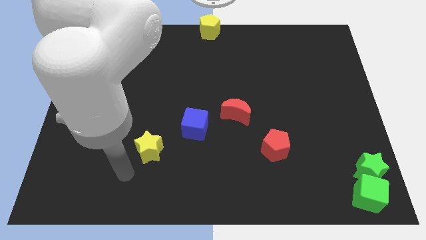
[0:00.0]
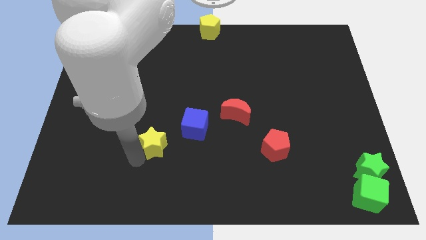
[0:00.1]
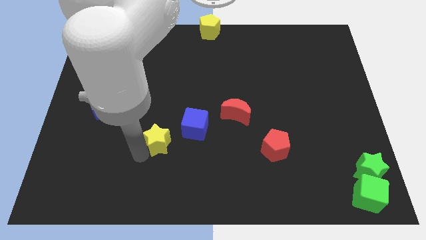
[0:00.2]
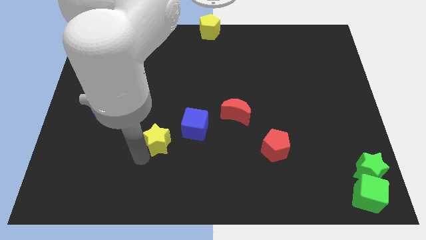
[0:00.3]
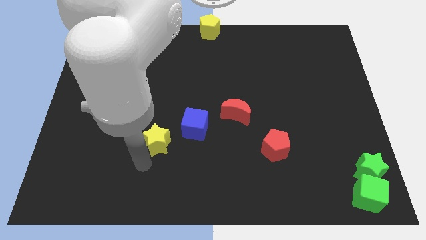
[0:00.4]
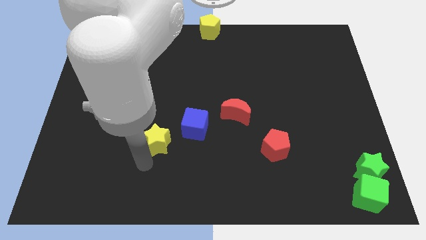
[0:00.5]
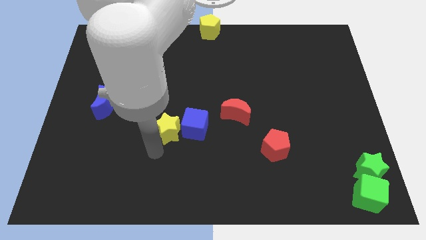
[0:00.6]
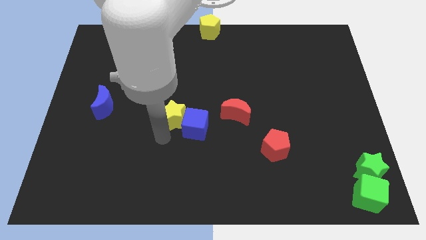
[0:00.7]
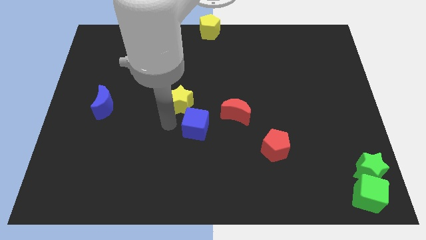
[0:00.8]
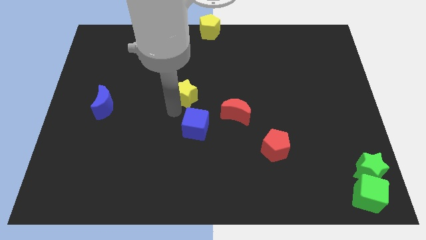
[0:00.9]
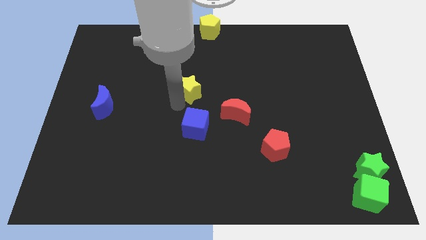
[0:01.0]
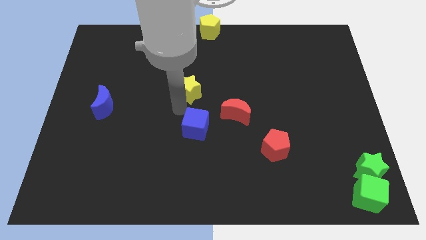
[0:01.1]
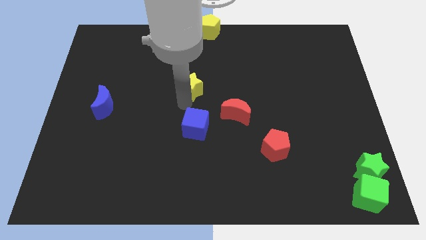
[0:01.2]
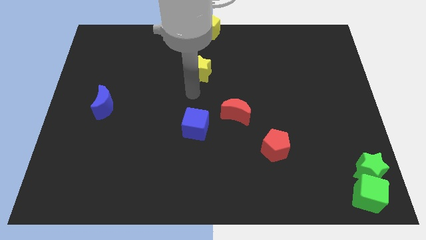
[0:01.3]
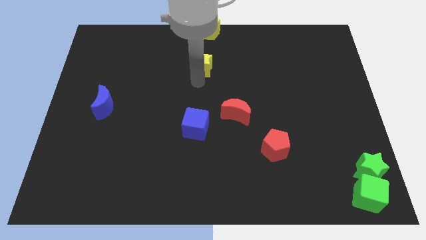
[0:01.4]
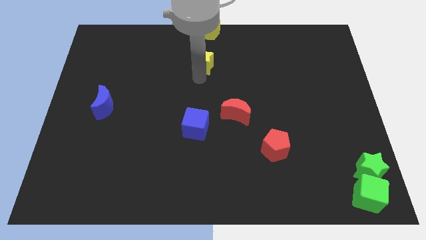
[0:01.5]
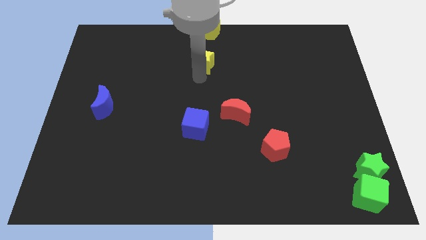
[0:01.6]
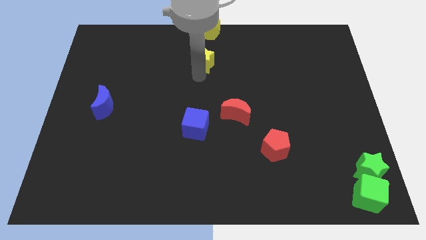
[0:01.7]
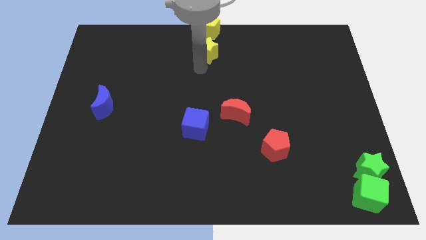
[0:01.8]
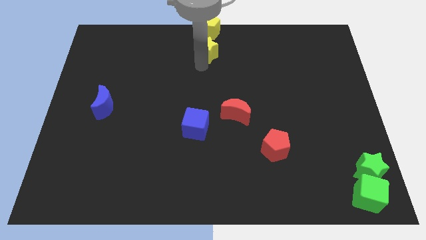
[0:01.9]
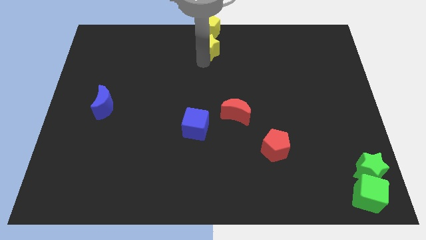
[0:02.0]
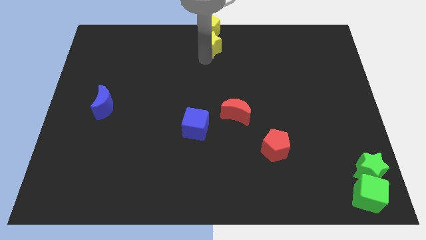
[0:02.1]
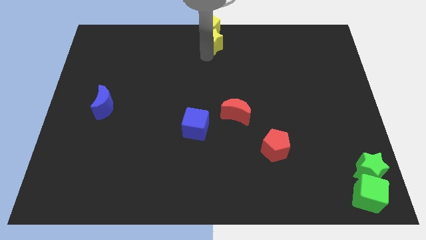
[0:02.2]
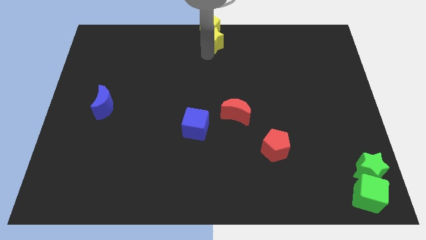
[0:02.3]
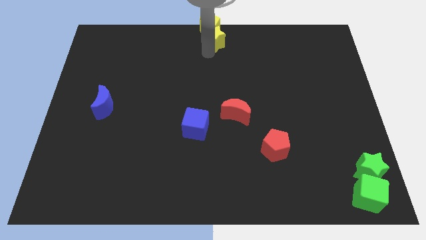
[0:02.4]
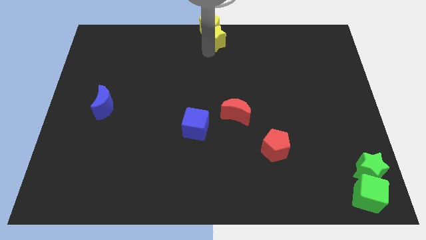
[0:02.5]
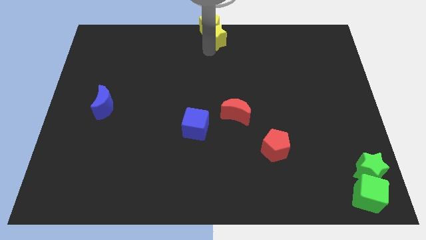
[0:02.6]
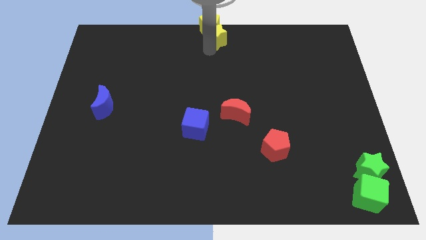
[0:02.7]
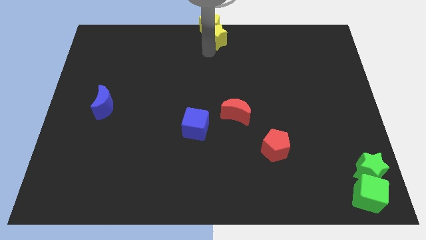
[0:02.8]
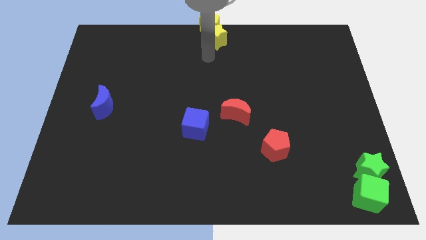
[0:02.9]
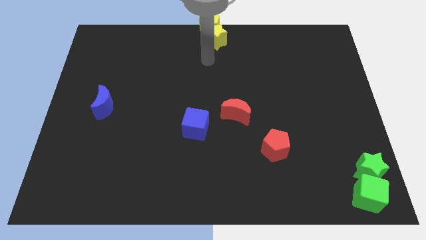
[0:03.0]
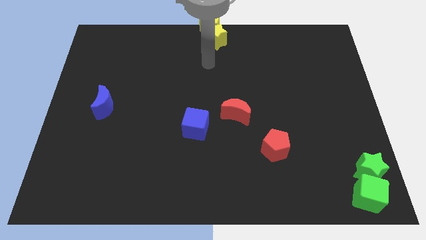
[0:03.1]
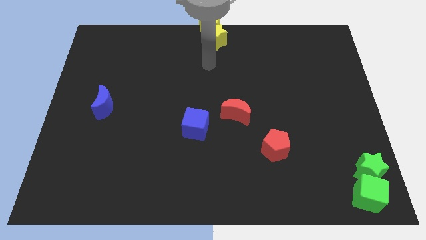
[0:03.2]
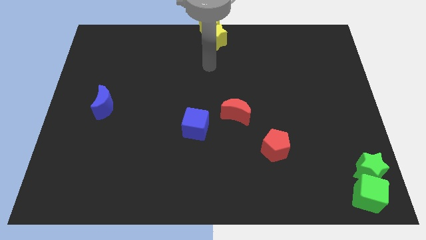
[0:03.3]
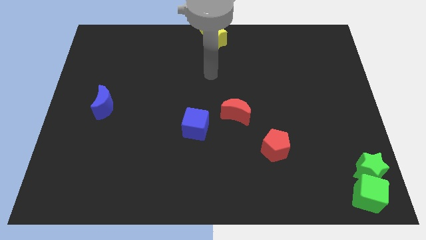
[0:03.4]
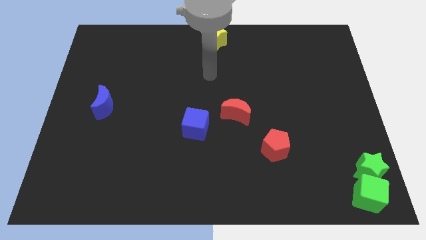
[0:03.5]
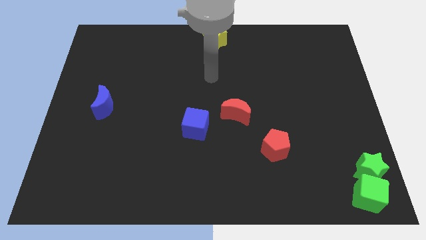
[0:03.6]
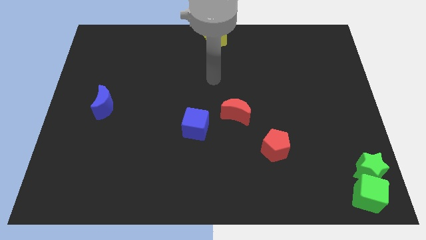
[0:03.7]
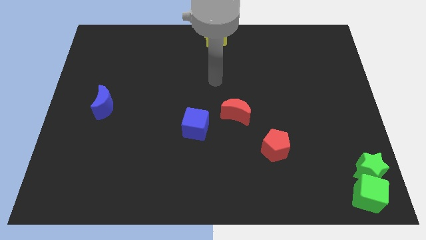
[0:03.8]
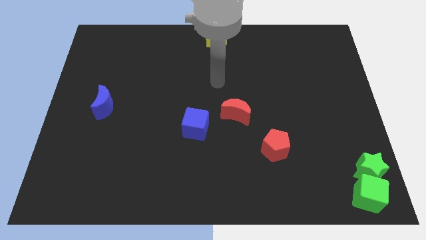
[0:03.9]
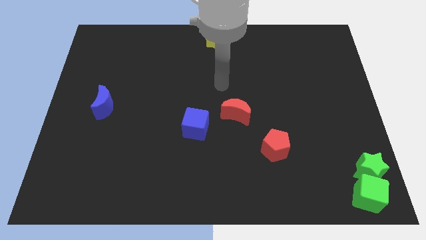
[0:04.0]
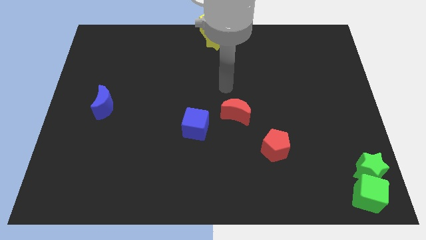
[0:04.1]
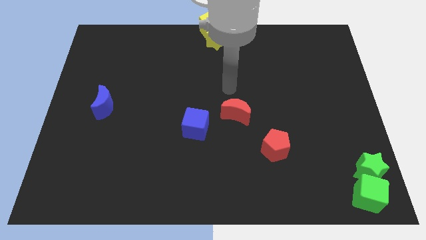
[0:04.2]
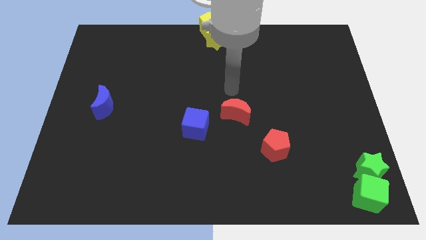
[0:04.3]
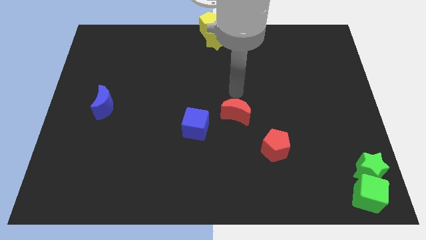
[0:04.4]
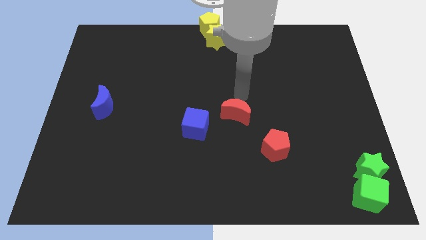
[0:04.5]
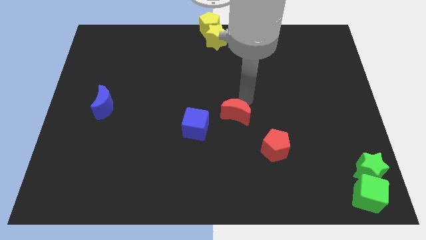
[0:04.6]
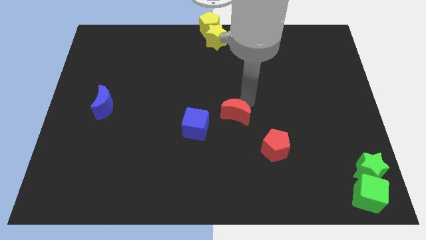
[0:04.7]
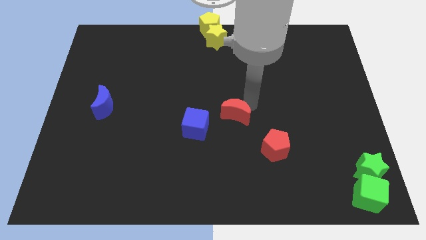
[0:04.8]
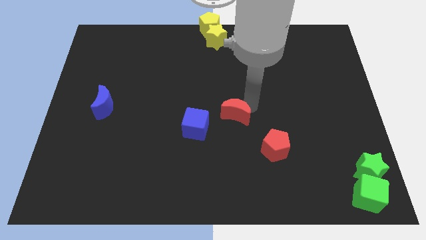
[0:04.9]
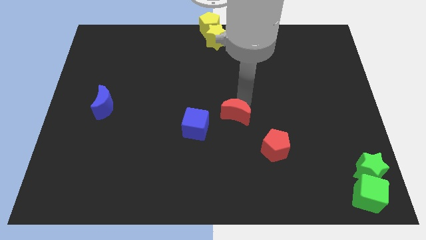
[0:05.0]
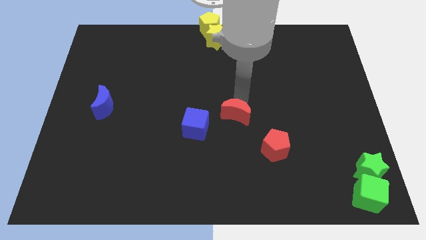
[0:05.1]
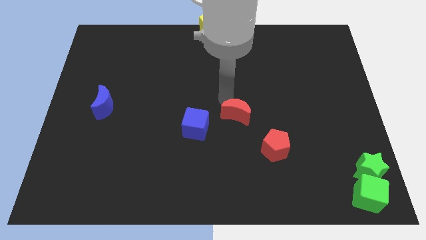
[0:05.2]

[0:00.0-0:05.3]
place the yellow star near the yellow pentagon

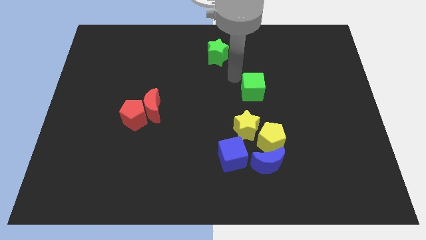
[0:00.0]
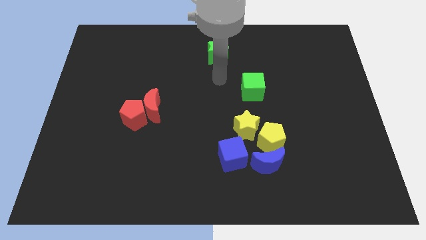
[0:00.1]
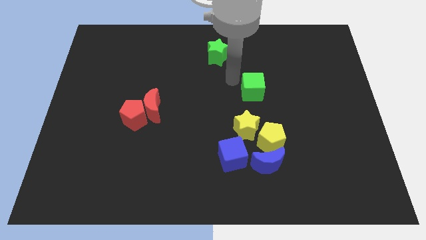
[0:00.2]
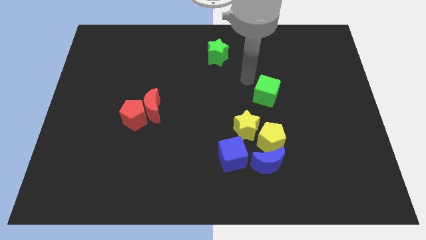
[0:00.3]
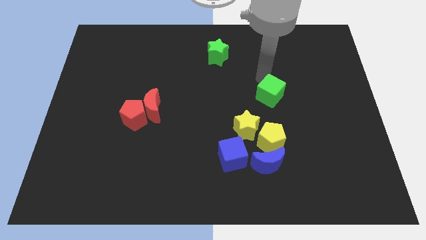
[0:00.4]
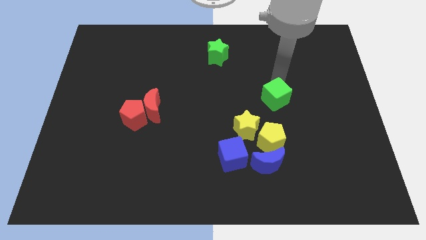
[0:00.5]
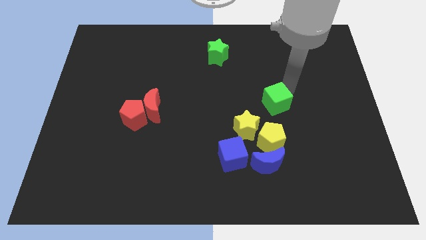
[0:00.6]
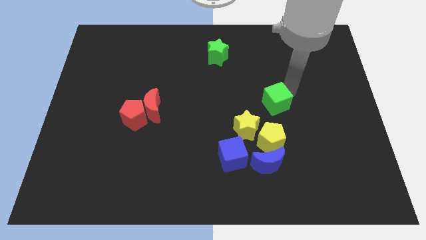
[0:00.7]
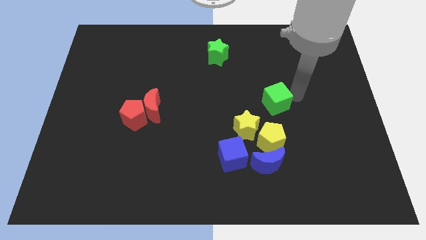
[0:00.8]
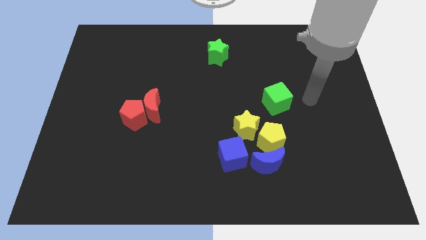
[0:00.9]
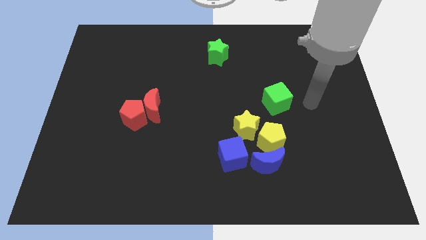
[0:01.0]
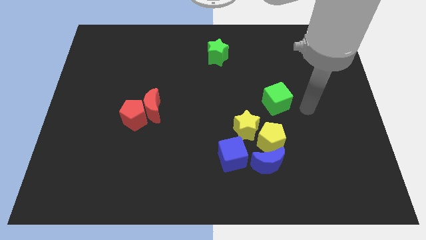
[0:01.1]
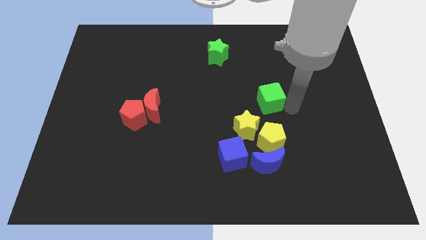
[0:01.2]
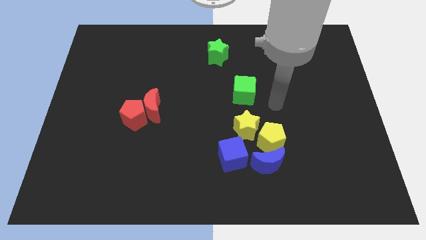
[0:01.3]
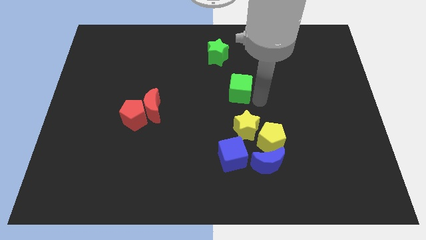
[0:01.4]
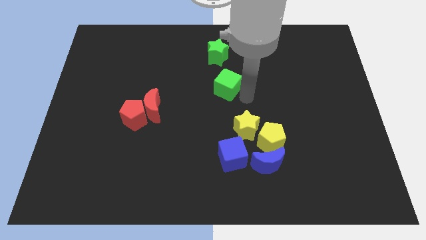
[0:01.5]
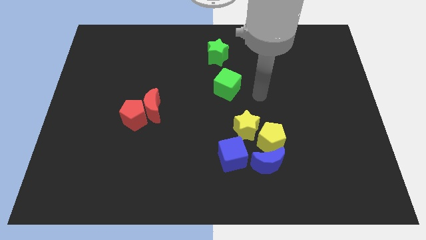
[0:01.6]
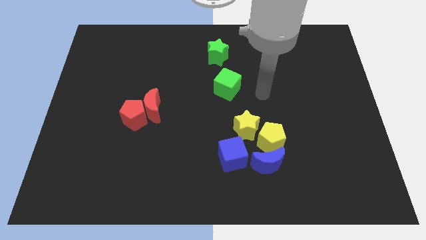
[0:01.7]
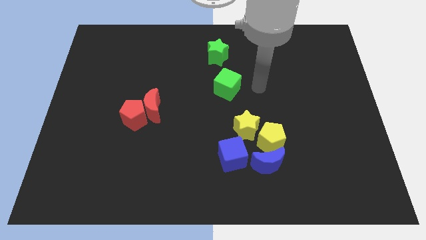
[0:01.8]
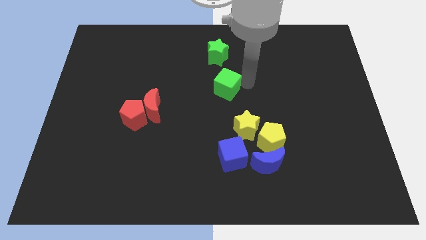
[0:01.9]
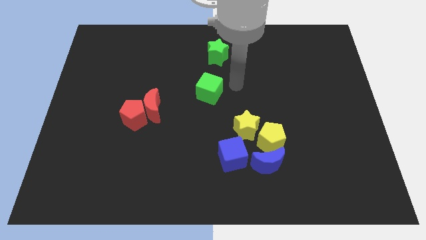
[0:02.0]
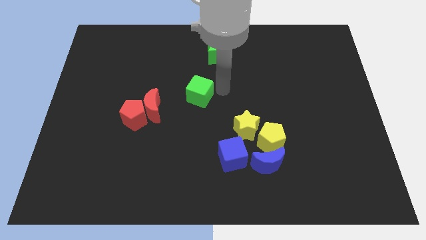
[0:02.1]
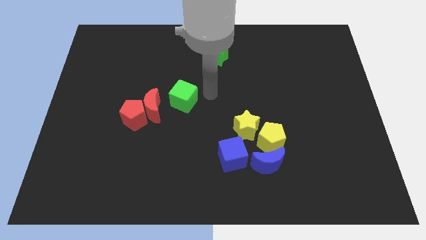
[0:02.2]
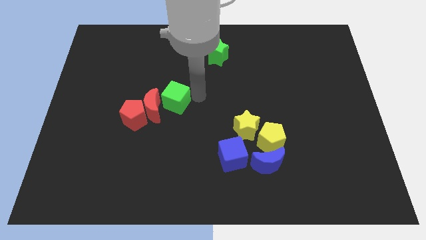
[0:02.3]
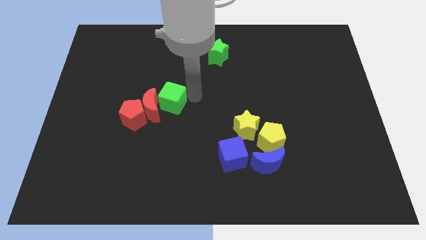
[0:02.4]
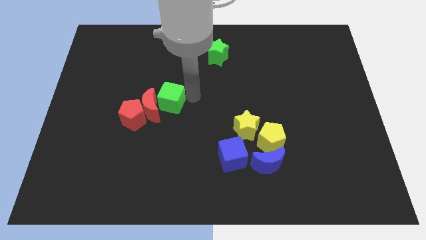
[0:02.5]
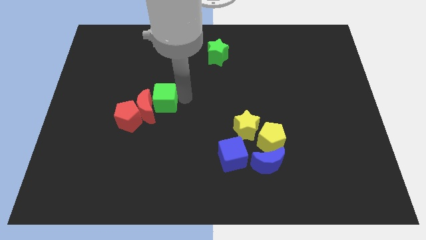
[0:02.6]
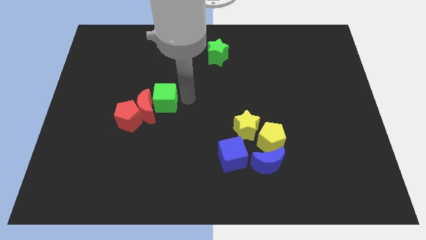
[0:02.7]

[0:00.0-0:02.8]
move the green cube to the right of the red crescent

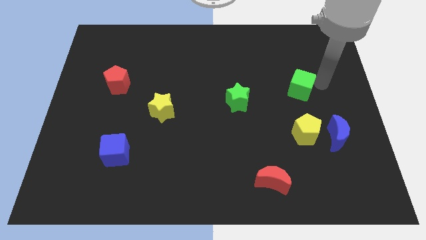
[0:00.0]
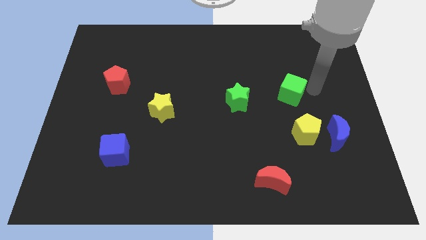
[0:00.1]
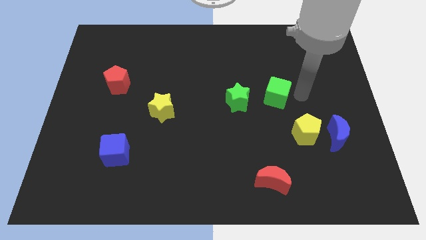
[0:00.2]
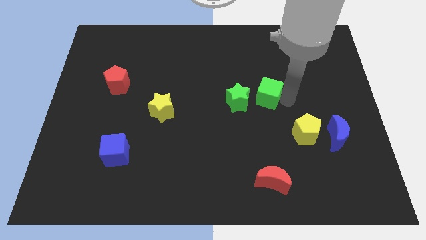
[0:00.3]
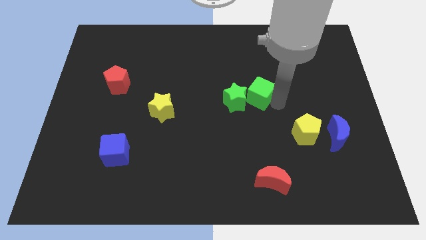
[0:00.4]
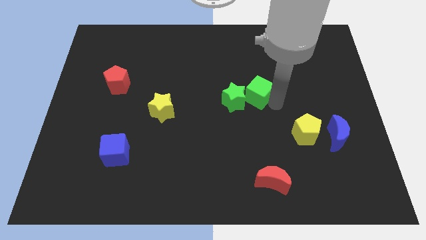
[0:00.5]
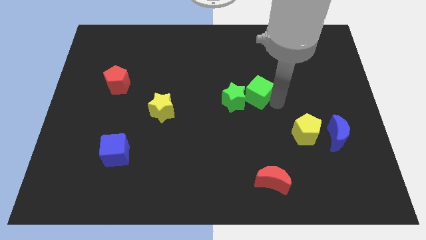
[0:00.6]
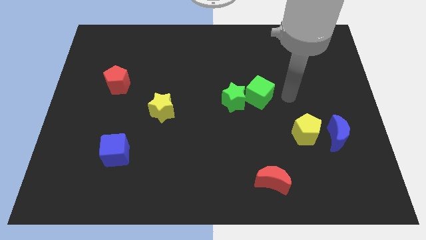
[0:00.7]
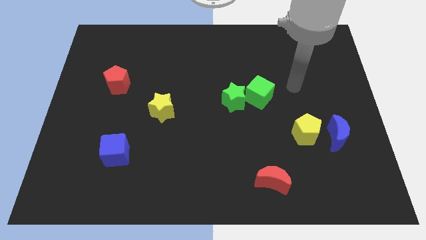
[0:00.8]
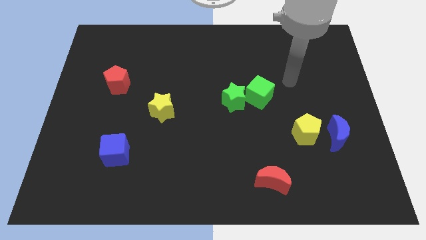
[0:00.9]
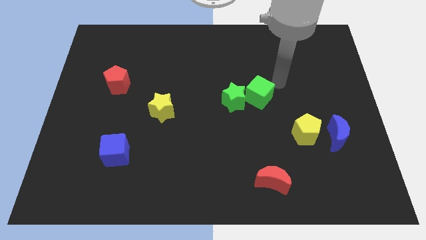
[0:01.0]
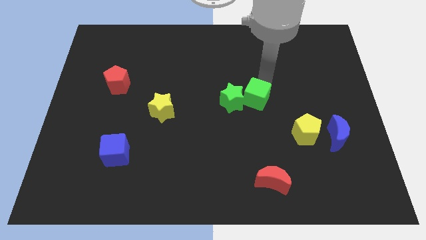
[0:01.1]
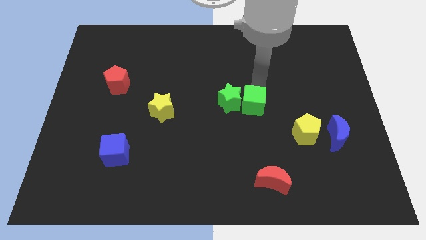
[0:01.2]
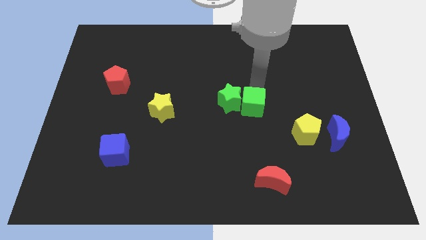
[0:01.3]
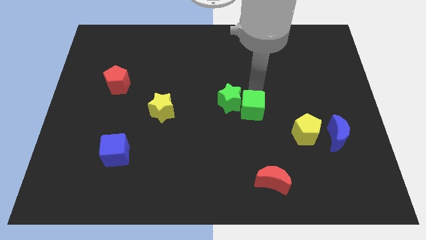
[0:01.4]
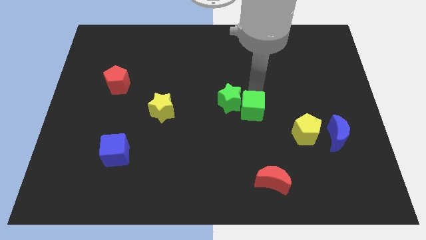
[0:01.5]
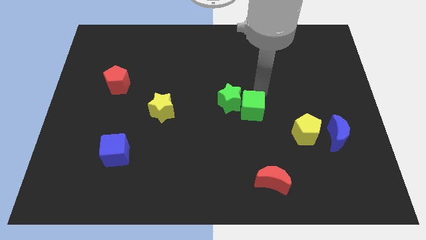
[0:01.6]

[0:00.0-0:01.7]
place the green cube close to green star
